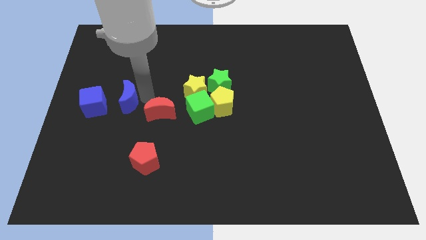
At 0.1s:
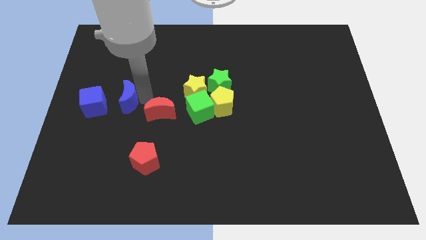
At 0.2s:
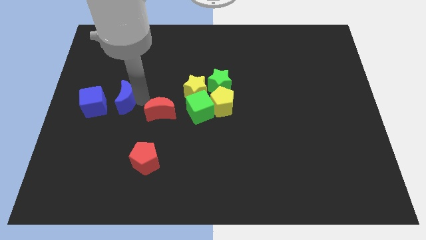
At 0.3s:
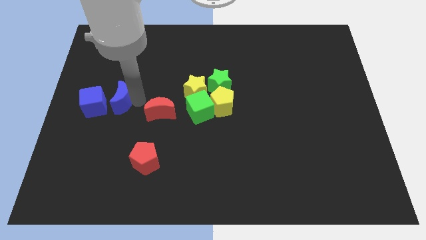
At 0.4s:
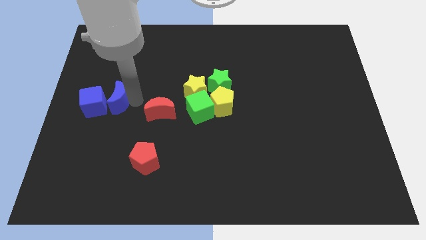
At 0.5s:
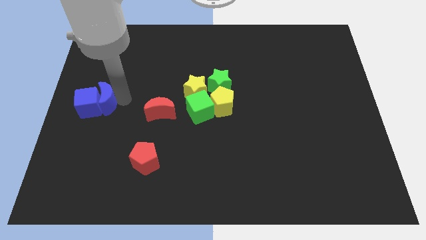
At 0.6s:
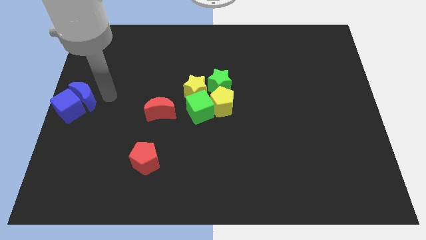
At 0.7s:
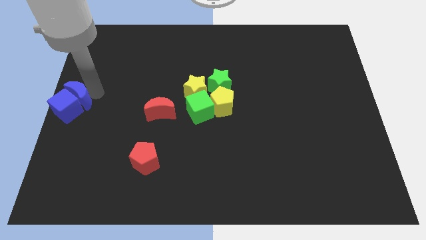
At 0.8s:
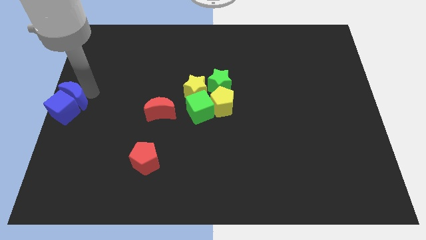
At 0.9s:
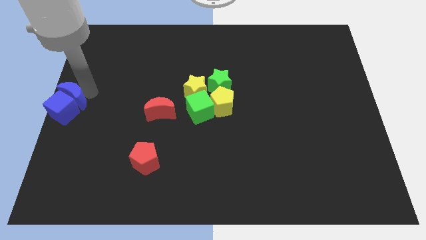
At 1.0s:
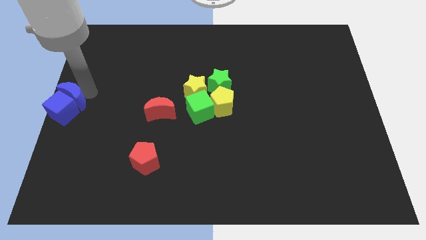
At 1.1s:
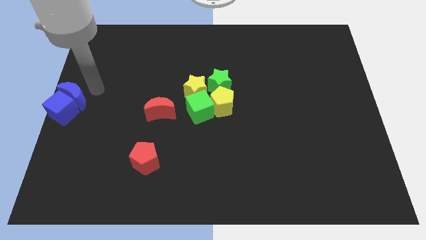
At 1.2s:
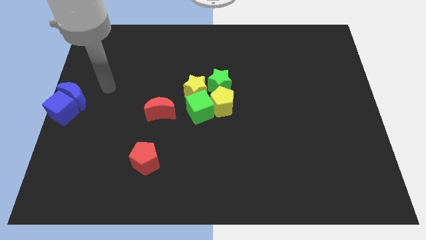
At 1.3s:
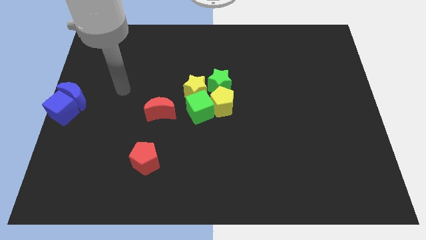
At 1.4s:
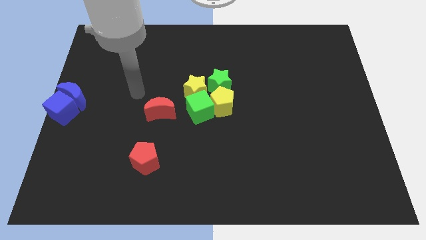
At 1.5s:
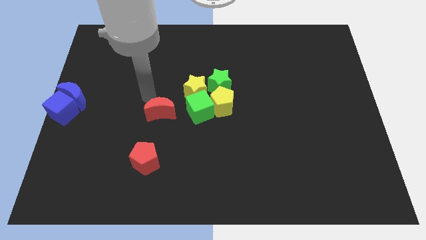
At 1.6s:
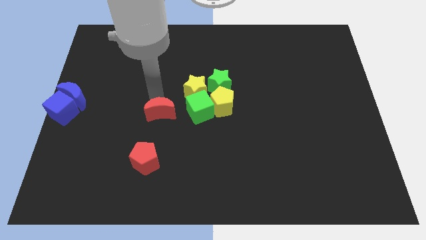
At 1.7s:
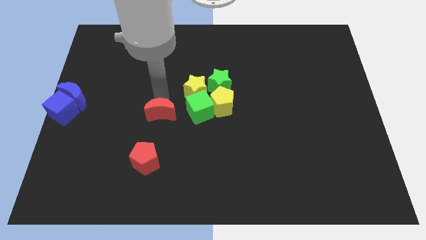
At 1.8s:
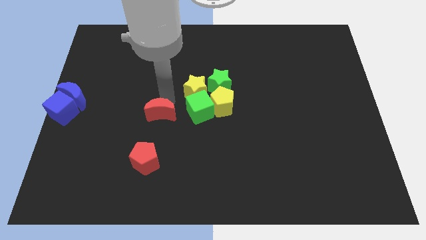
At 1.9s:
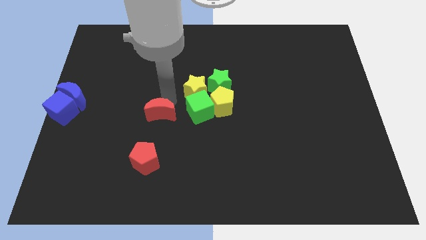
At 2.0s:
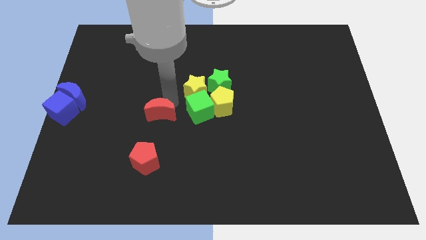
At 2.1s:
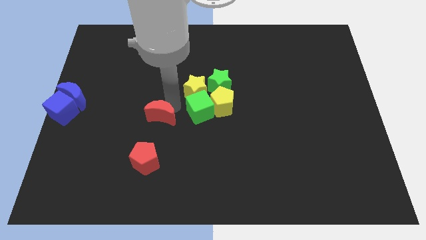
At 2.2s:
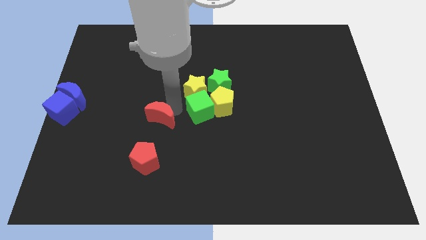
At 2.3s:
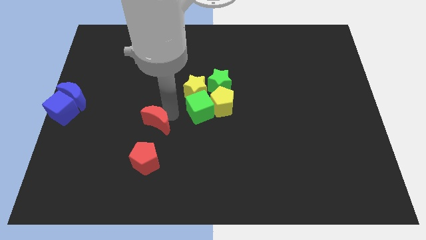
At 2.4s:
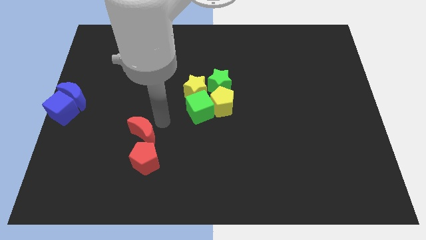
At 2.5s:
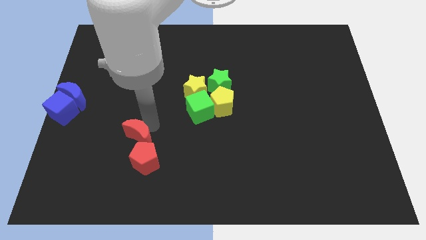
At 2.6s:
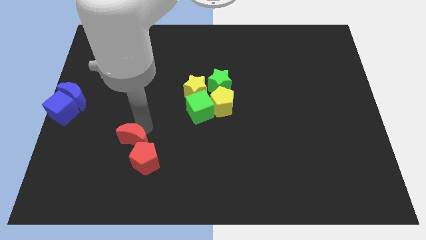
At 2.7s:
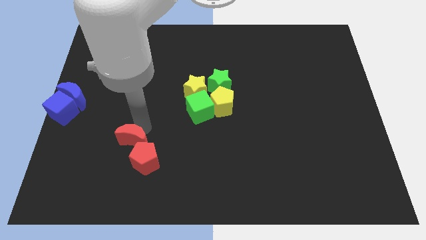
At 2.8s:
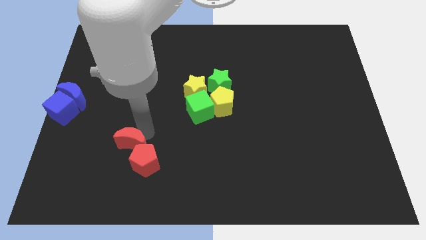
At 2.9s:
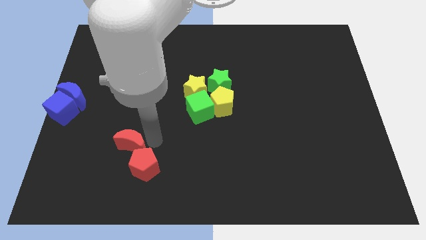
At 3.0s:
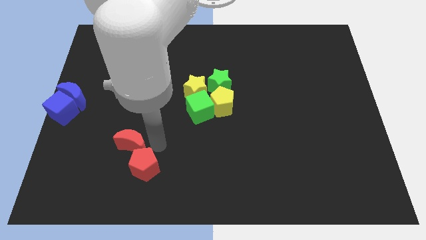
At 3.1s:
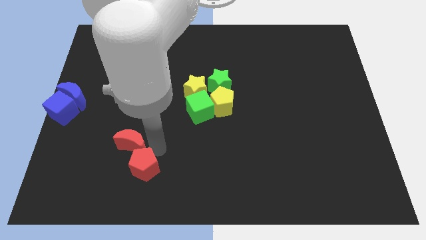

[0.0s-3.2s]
push the red crescent towards the red pentagon

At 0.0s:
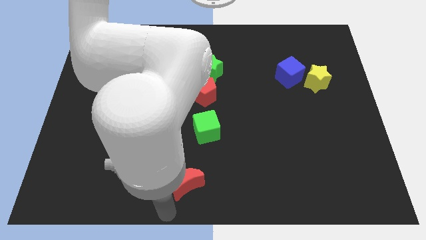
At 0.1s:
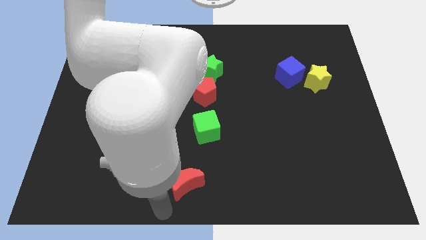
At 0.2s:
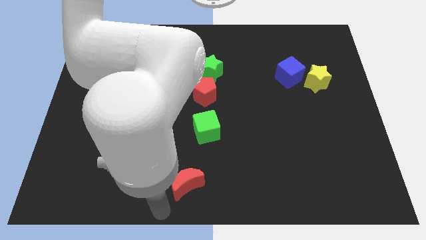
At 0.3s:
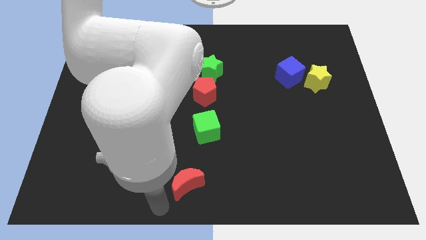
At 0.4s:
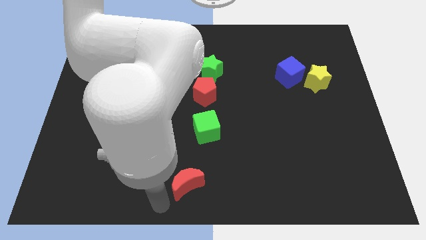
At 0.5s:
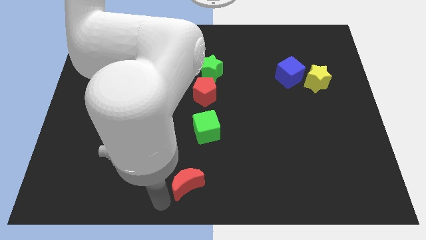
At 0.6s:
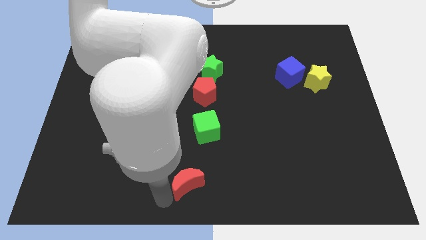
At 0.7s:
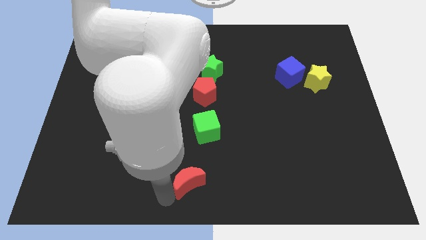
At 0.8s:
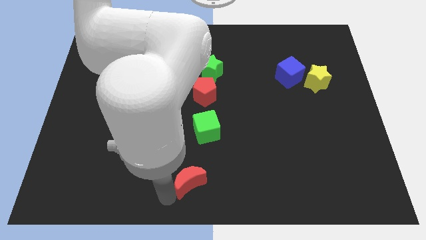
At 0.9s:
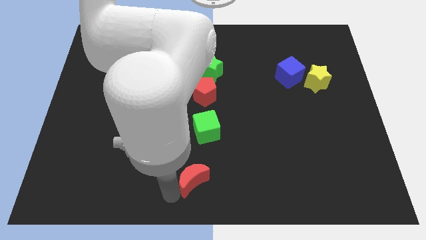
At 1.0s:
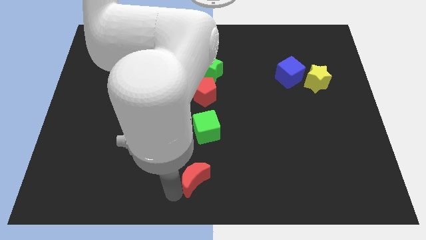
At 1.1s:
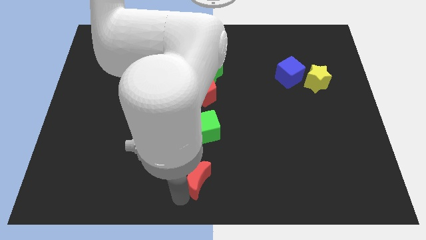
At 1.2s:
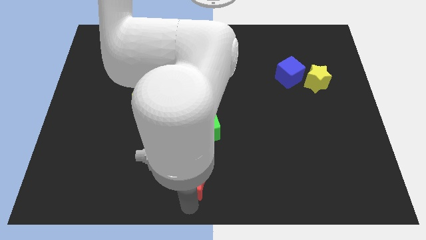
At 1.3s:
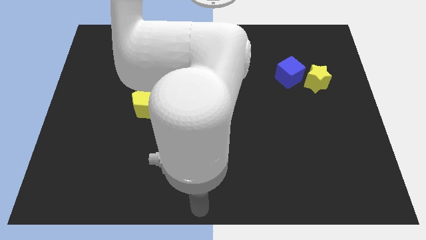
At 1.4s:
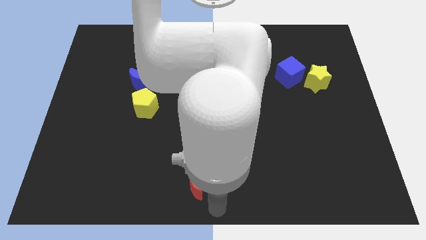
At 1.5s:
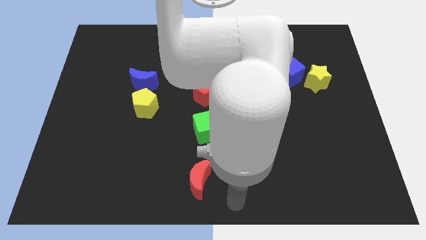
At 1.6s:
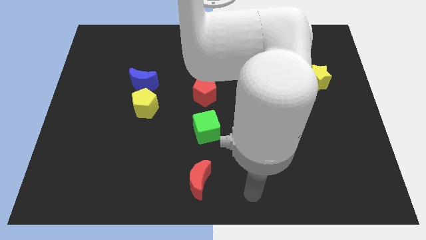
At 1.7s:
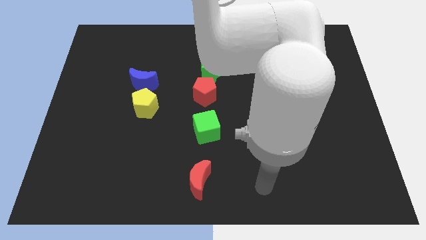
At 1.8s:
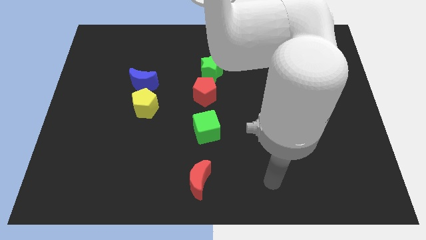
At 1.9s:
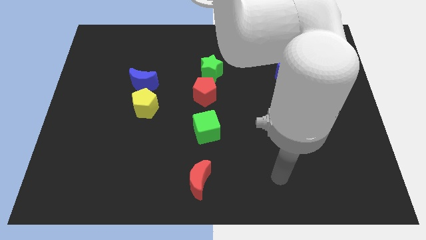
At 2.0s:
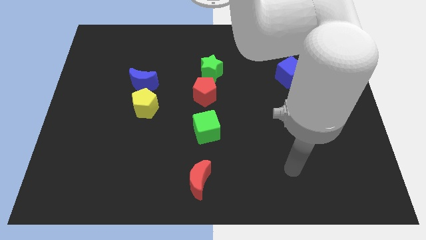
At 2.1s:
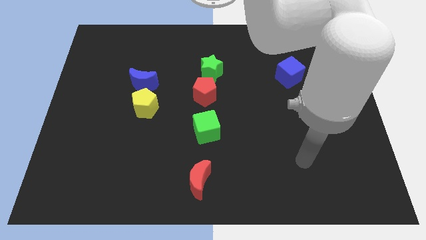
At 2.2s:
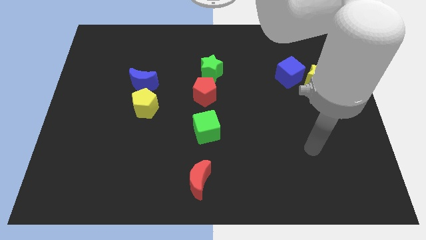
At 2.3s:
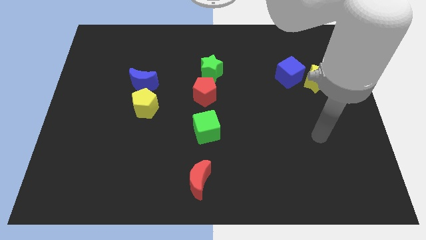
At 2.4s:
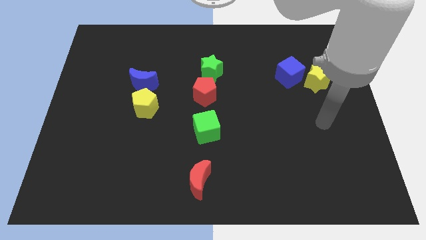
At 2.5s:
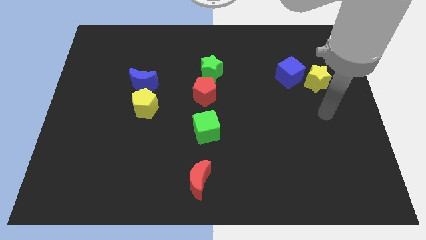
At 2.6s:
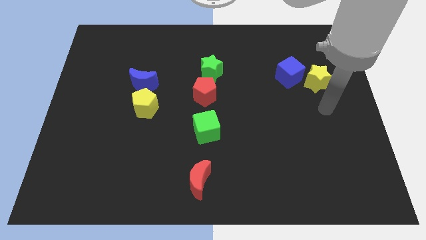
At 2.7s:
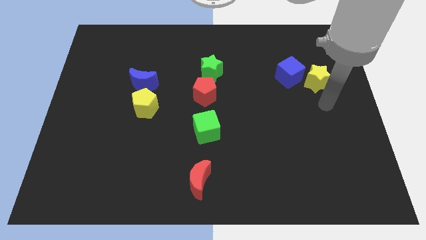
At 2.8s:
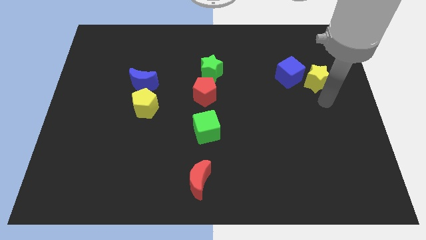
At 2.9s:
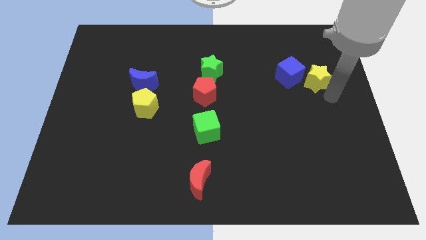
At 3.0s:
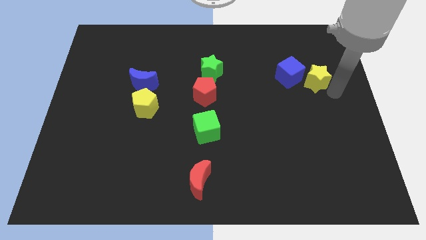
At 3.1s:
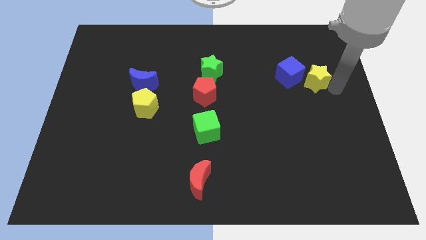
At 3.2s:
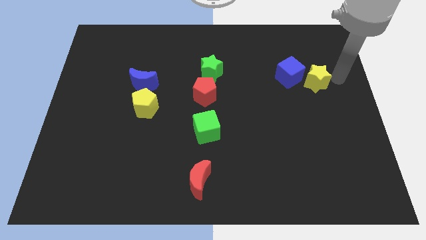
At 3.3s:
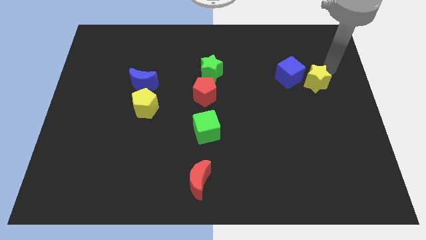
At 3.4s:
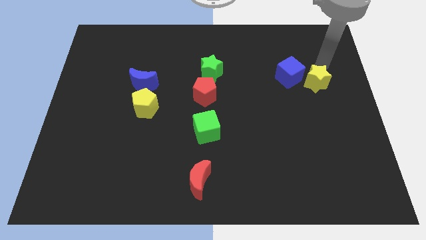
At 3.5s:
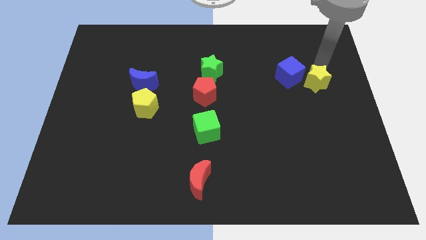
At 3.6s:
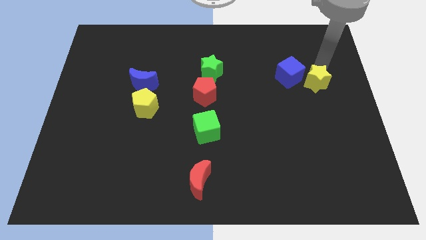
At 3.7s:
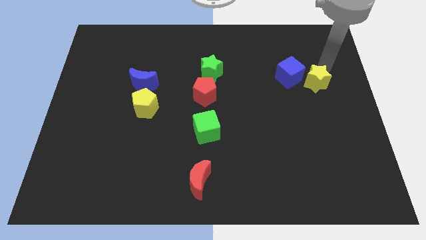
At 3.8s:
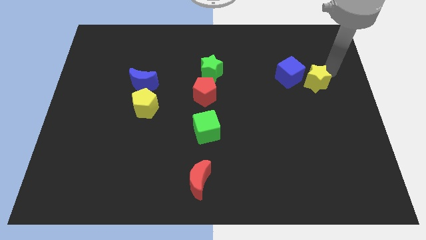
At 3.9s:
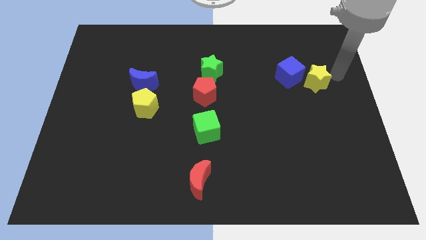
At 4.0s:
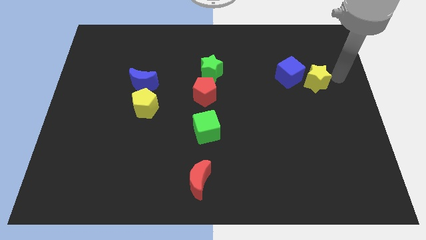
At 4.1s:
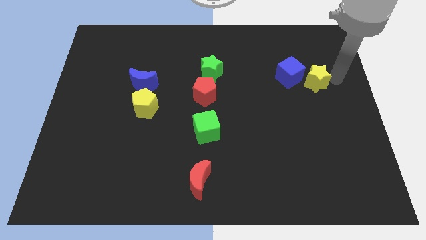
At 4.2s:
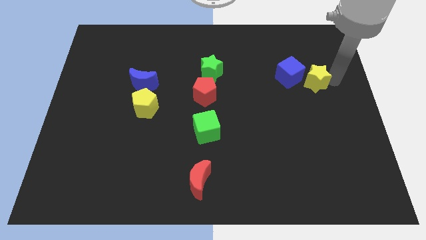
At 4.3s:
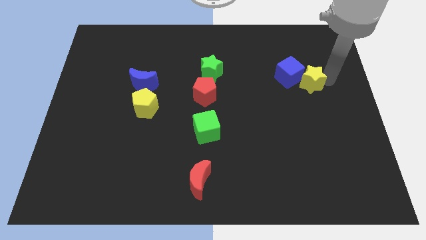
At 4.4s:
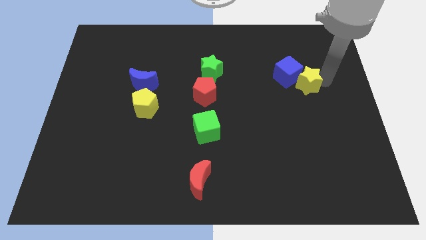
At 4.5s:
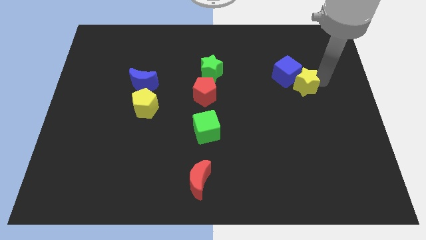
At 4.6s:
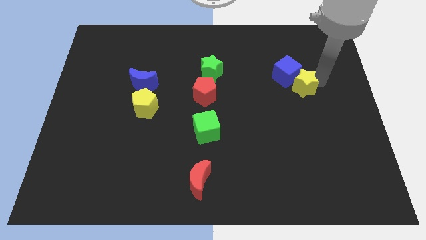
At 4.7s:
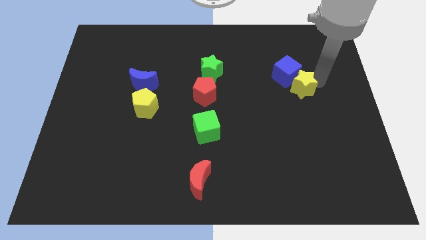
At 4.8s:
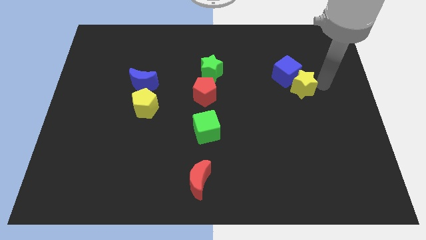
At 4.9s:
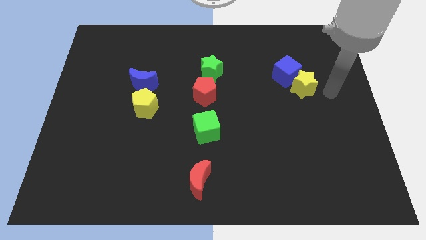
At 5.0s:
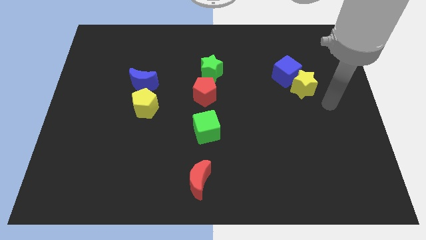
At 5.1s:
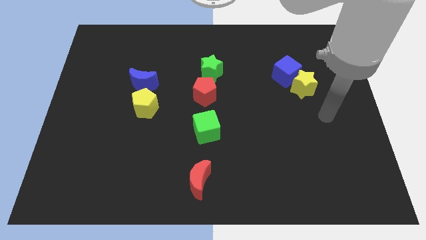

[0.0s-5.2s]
slide the yellow star diagonally to the blue cube

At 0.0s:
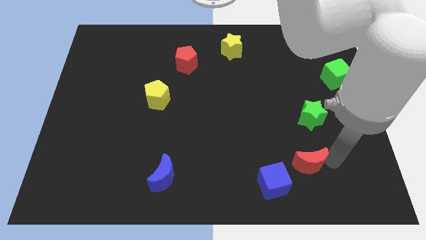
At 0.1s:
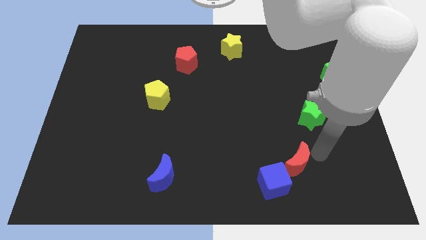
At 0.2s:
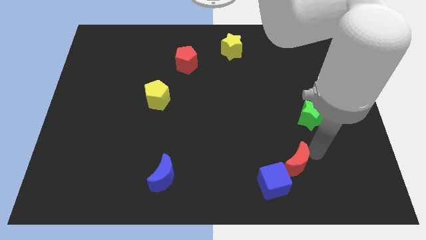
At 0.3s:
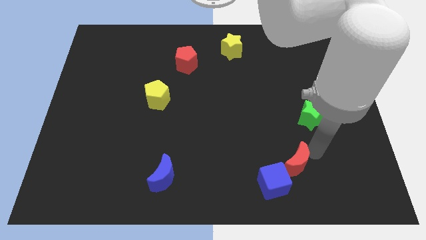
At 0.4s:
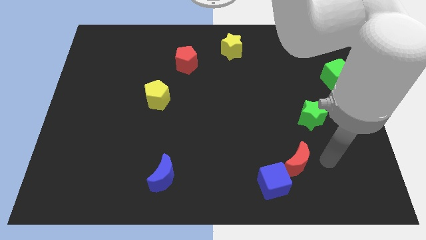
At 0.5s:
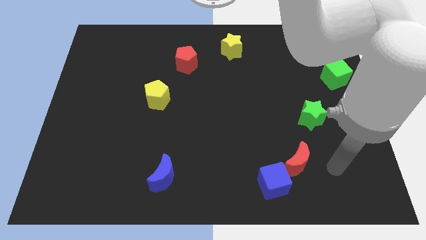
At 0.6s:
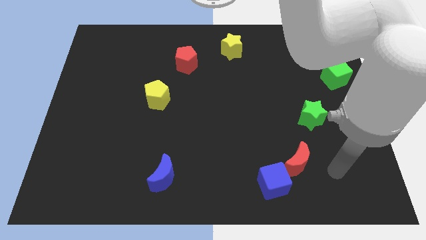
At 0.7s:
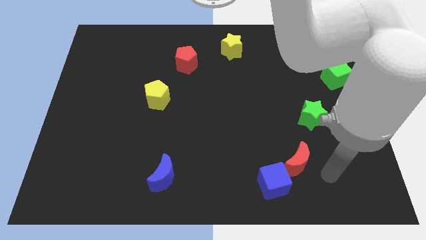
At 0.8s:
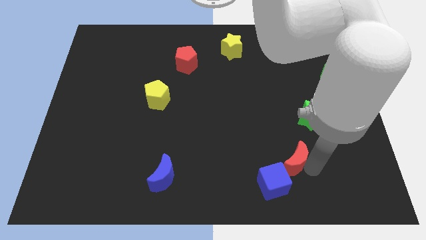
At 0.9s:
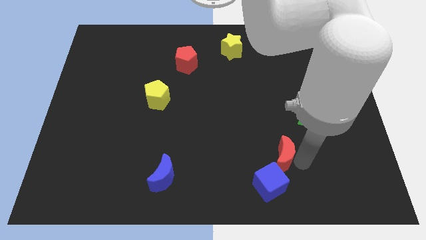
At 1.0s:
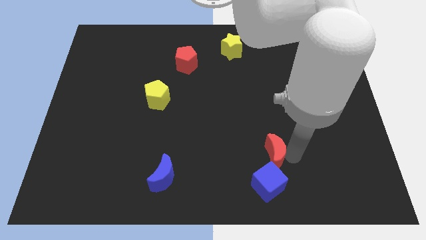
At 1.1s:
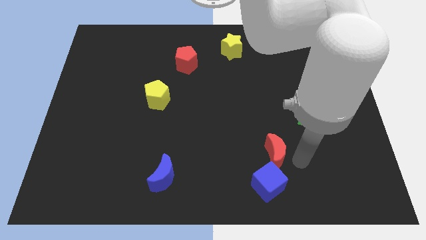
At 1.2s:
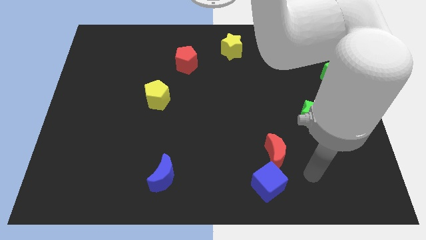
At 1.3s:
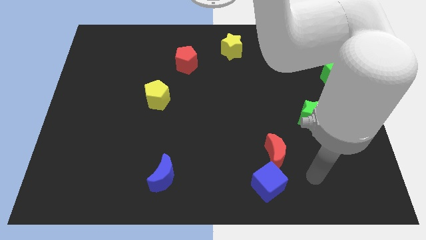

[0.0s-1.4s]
put the red moon above the blue cube
